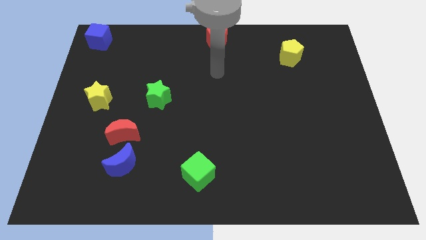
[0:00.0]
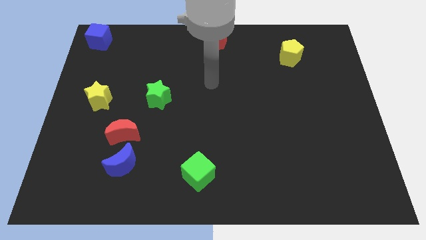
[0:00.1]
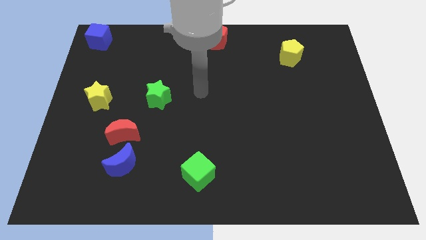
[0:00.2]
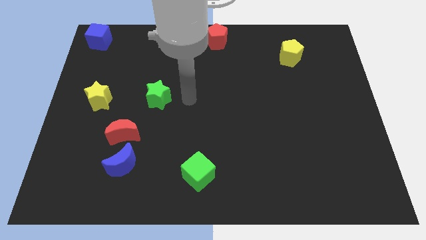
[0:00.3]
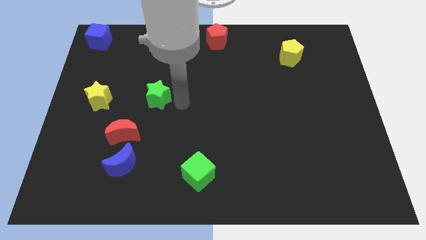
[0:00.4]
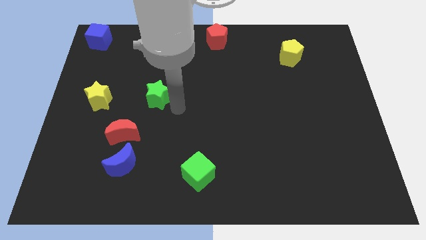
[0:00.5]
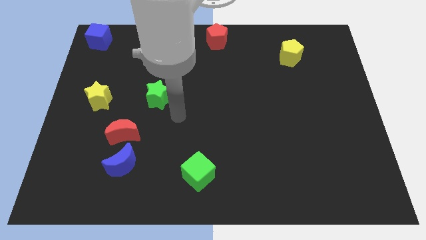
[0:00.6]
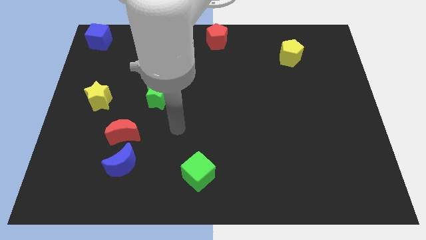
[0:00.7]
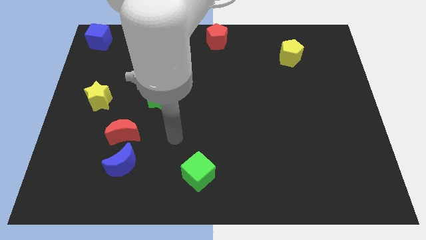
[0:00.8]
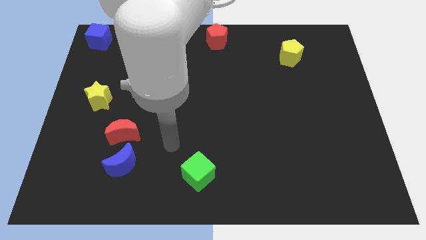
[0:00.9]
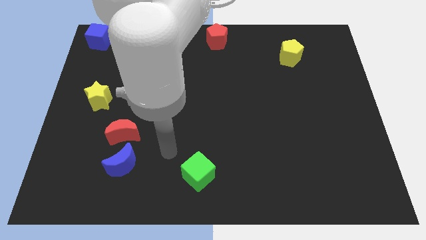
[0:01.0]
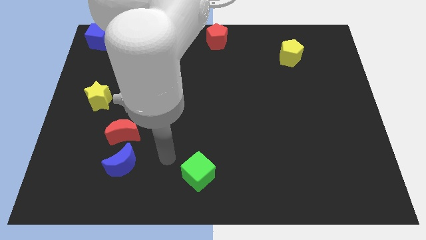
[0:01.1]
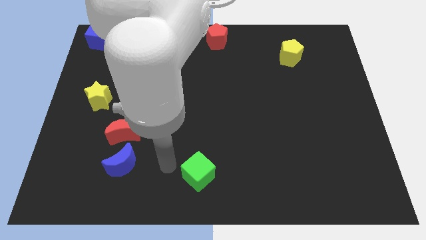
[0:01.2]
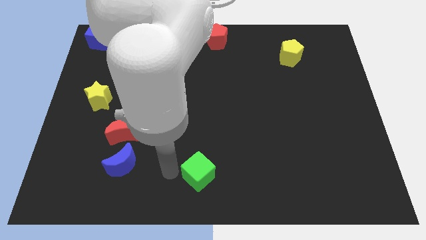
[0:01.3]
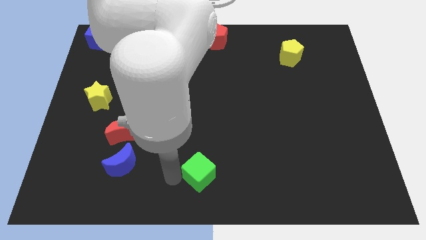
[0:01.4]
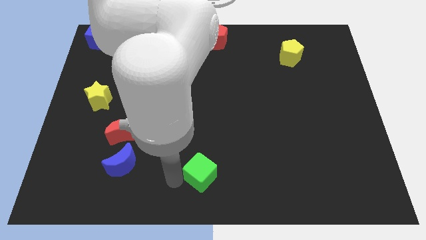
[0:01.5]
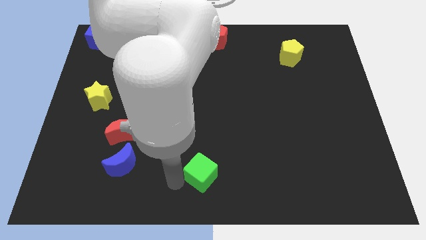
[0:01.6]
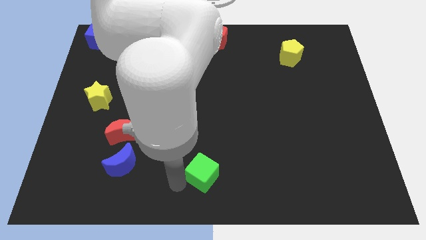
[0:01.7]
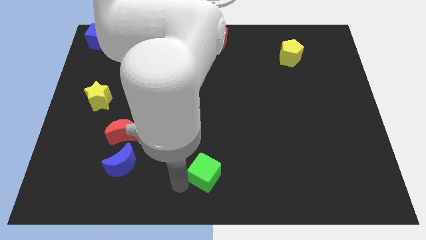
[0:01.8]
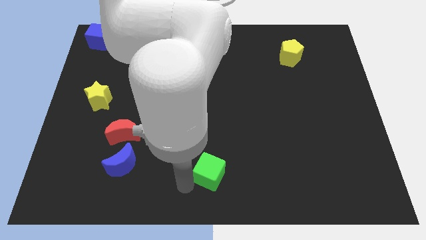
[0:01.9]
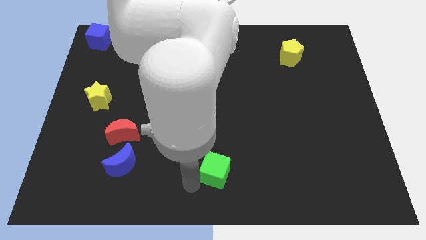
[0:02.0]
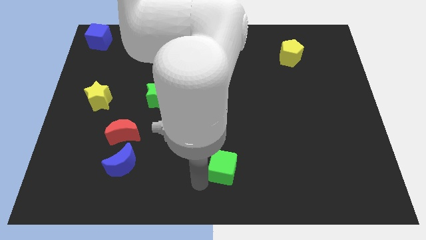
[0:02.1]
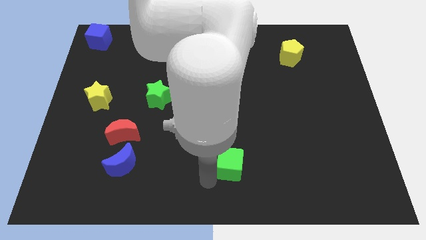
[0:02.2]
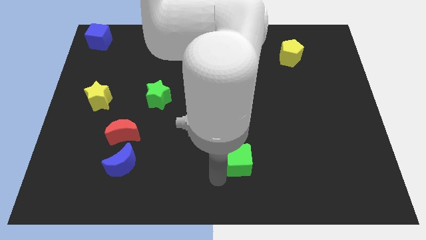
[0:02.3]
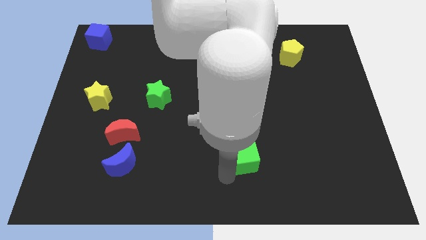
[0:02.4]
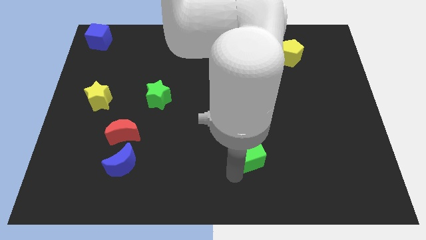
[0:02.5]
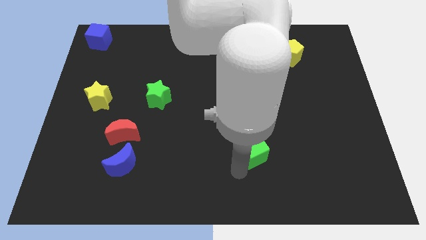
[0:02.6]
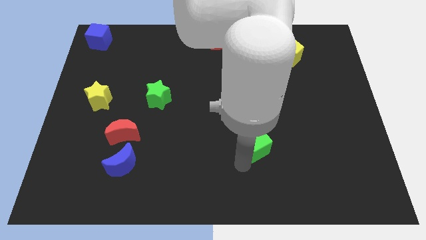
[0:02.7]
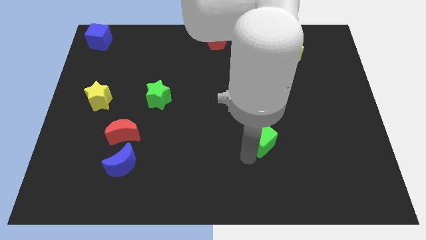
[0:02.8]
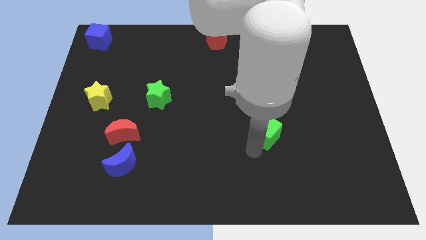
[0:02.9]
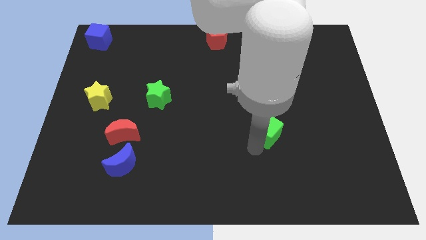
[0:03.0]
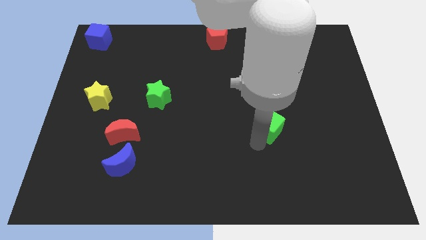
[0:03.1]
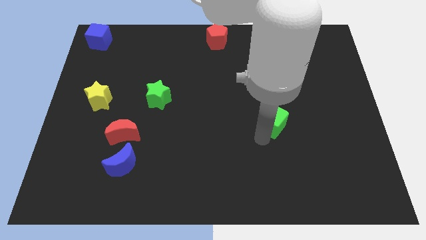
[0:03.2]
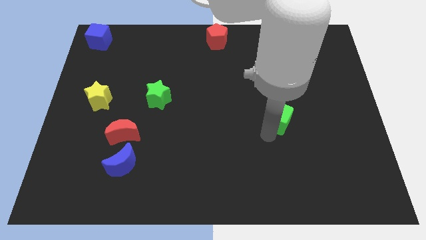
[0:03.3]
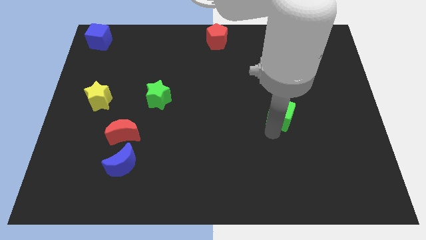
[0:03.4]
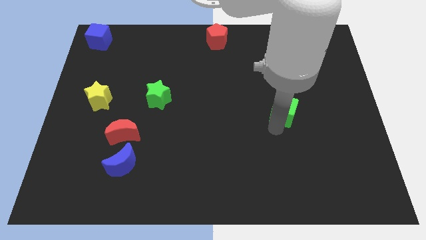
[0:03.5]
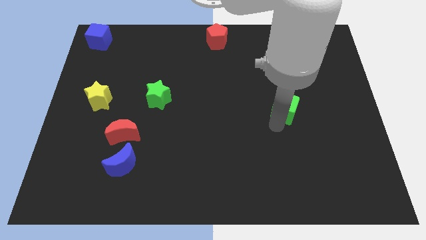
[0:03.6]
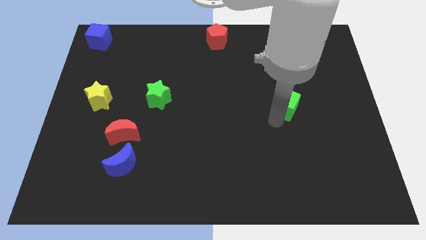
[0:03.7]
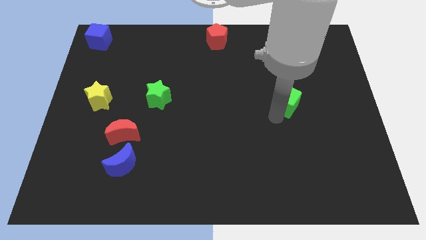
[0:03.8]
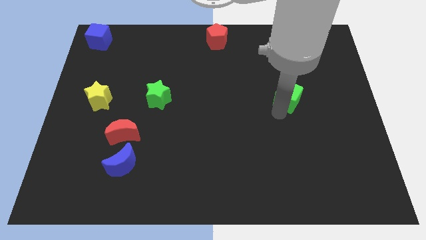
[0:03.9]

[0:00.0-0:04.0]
move the green cube away from the top of the bottom center of the board

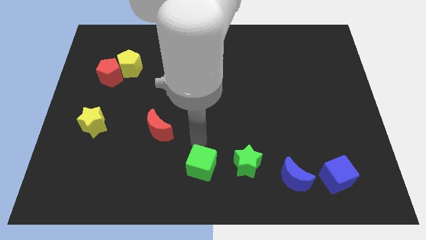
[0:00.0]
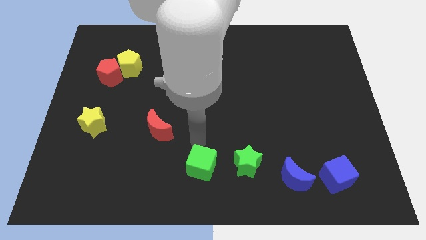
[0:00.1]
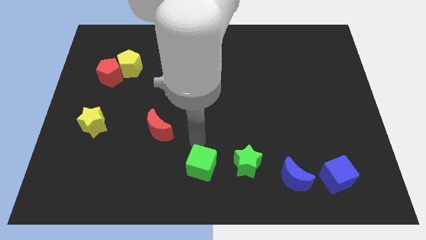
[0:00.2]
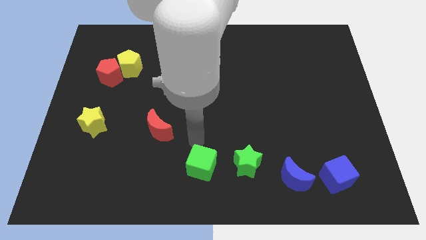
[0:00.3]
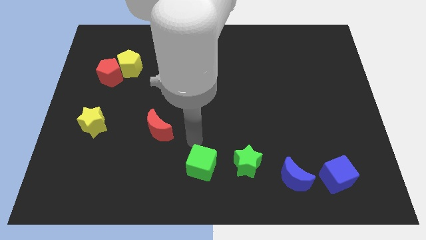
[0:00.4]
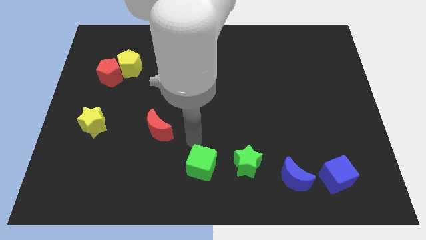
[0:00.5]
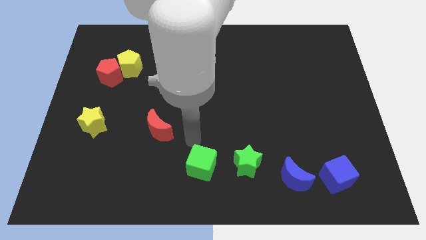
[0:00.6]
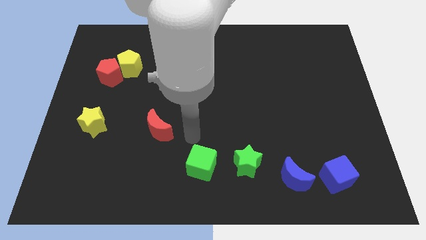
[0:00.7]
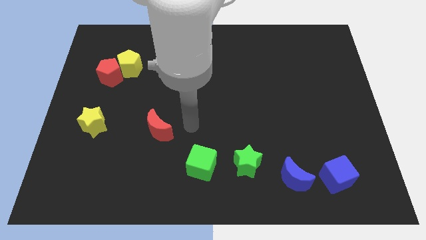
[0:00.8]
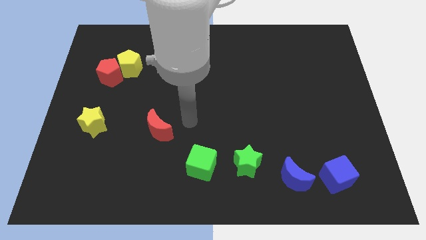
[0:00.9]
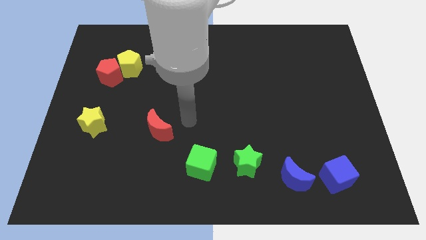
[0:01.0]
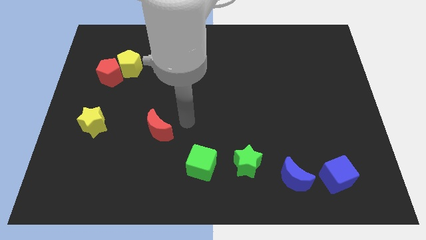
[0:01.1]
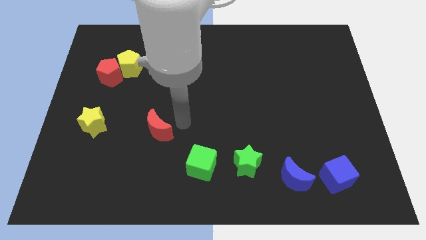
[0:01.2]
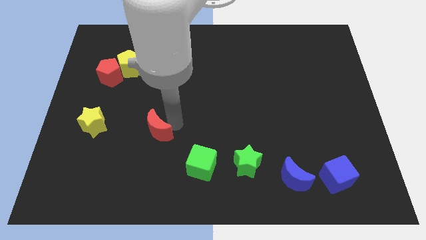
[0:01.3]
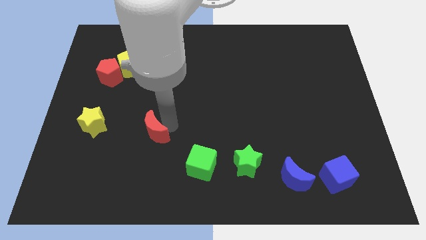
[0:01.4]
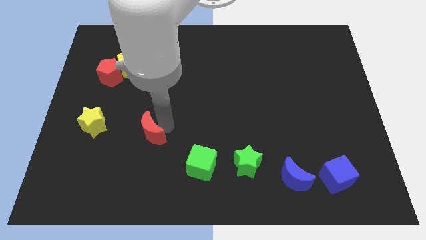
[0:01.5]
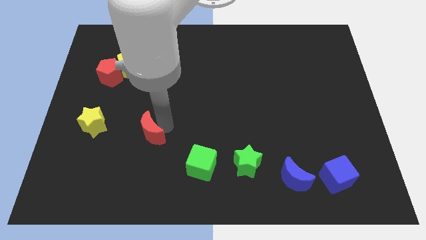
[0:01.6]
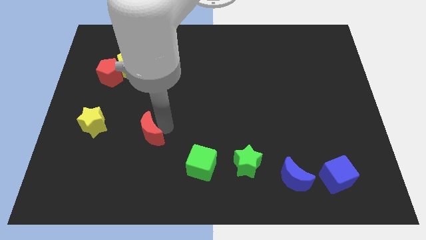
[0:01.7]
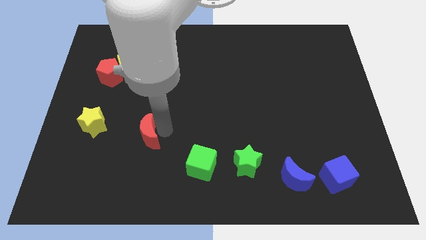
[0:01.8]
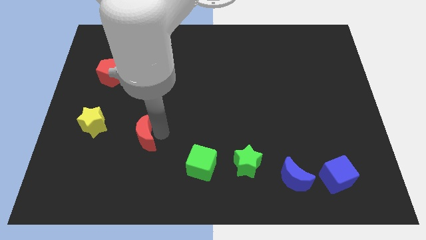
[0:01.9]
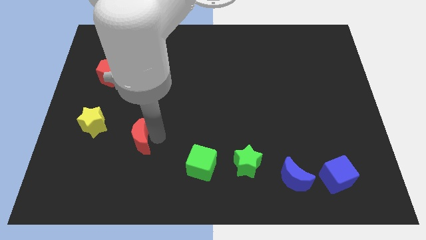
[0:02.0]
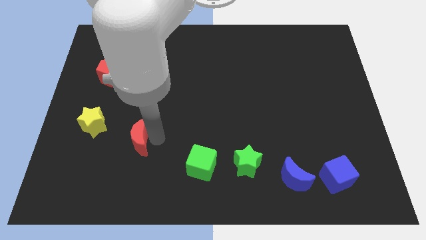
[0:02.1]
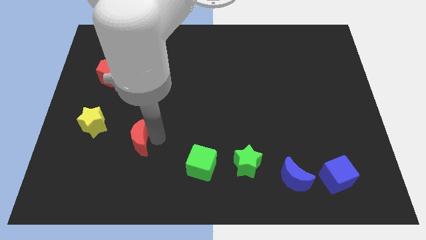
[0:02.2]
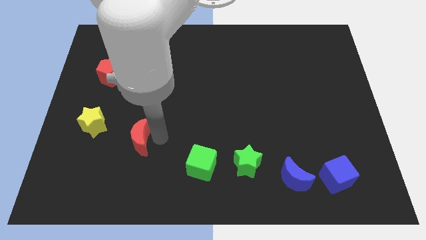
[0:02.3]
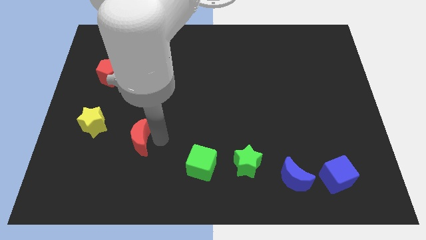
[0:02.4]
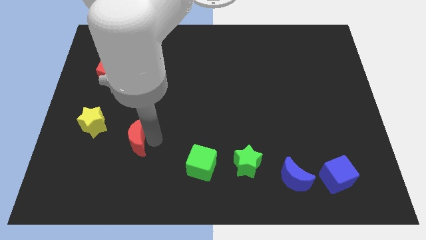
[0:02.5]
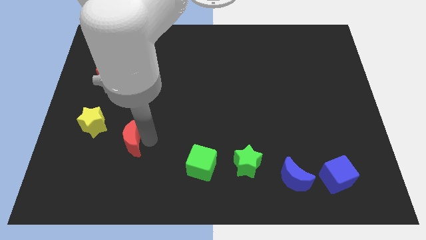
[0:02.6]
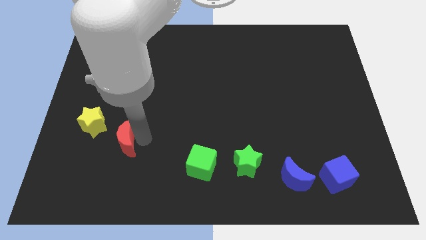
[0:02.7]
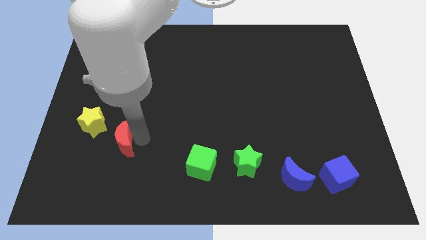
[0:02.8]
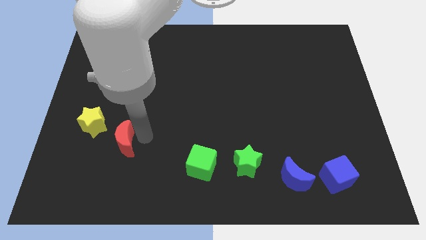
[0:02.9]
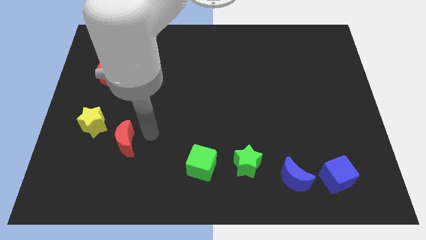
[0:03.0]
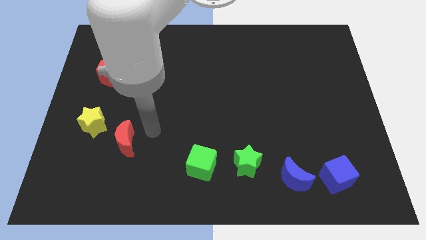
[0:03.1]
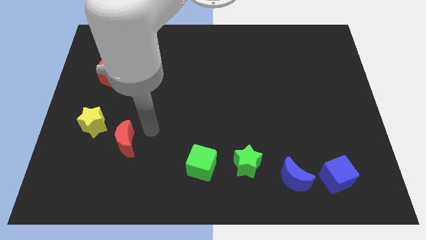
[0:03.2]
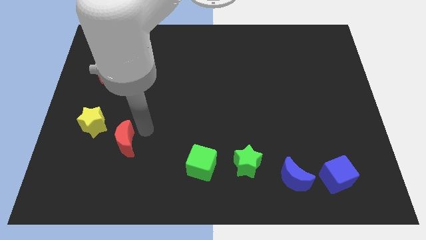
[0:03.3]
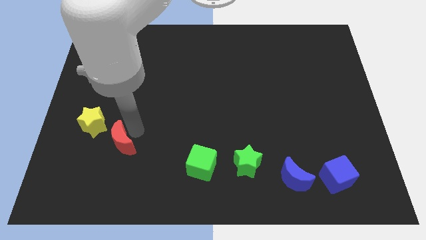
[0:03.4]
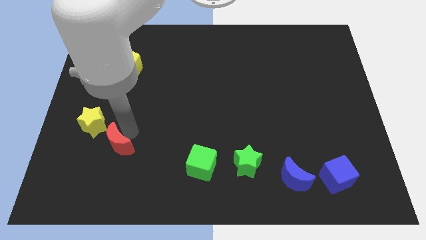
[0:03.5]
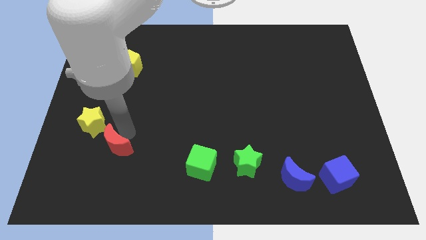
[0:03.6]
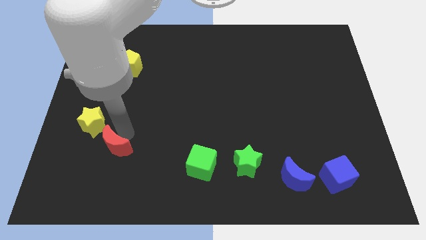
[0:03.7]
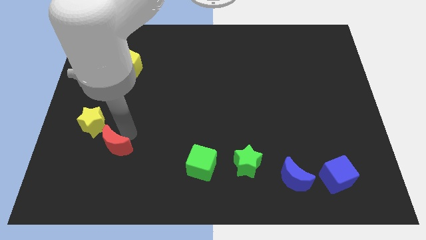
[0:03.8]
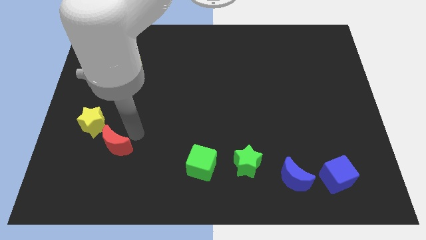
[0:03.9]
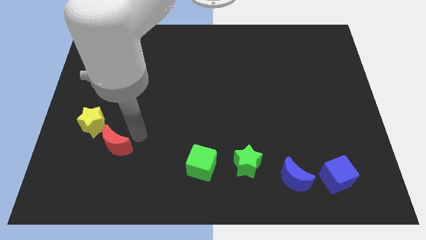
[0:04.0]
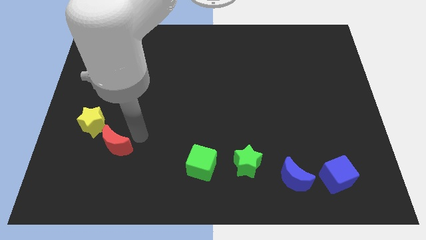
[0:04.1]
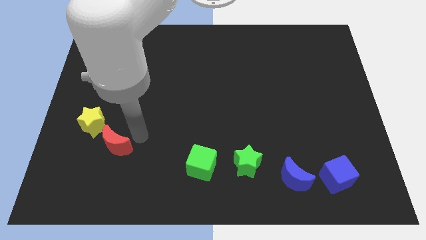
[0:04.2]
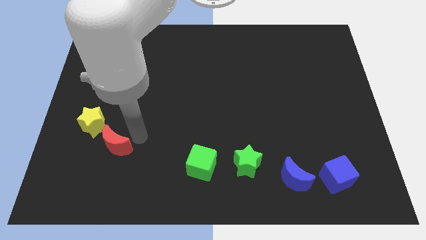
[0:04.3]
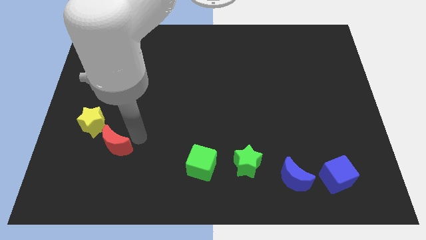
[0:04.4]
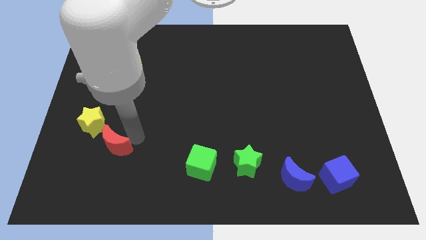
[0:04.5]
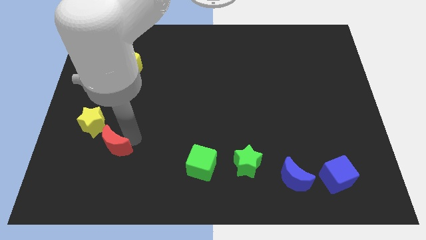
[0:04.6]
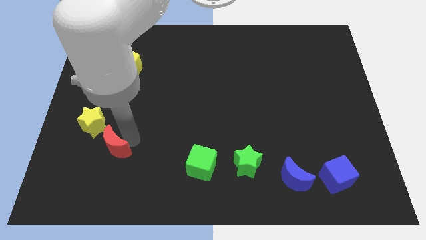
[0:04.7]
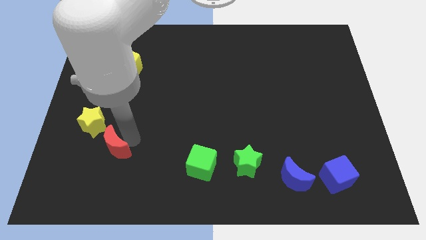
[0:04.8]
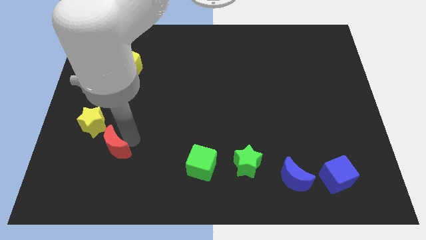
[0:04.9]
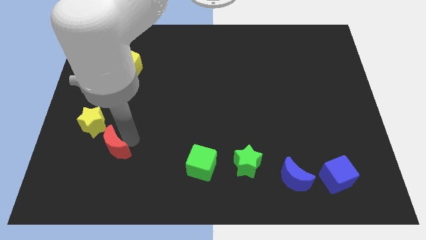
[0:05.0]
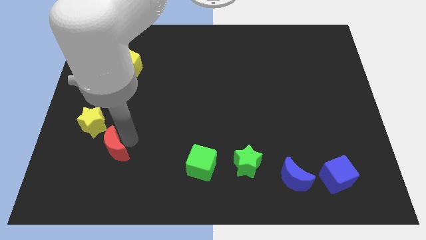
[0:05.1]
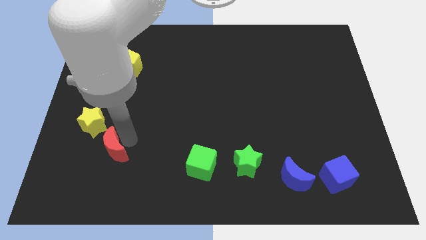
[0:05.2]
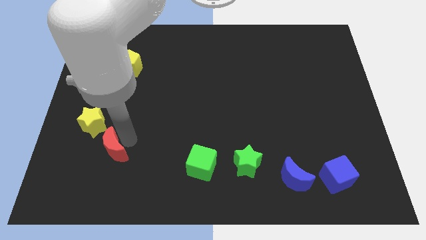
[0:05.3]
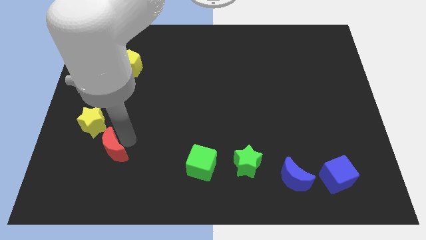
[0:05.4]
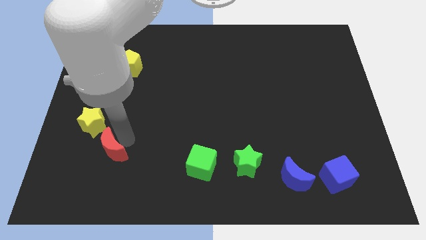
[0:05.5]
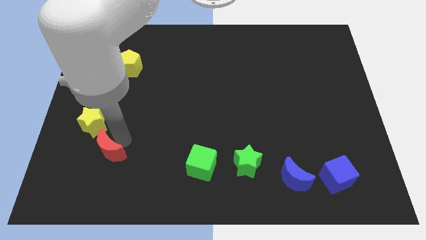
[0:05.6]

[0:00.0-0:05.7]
push the red crescent to the bottom right to the yellow star
